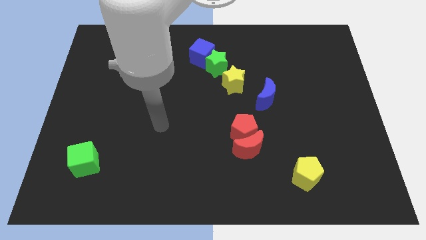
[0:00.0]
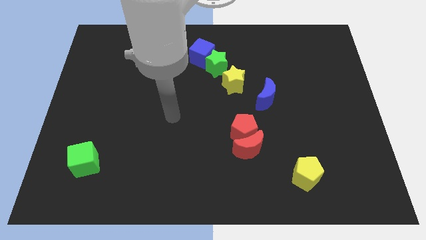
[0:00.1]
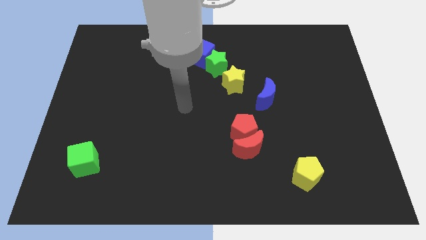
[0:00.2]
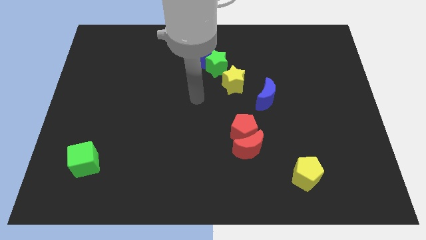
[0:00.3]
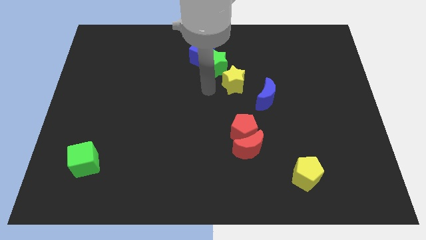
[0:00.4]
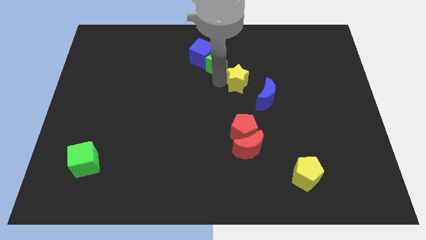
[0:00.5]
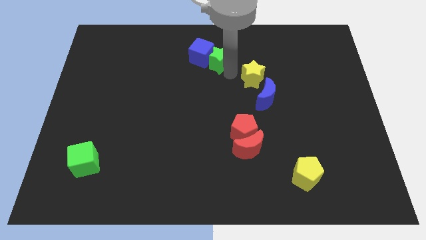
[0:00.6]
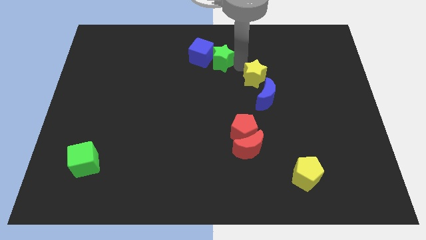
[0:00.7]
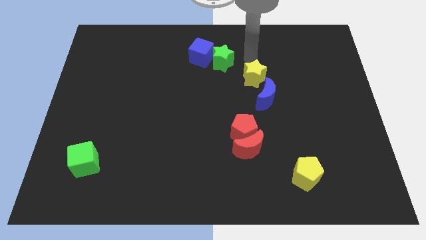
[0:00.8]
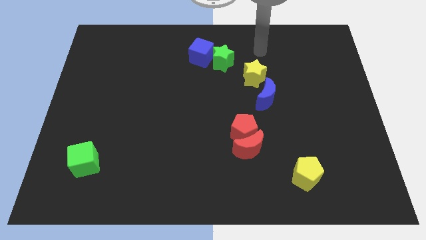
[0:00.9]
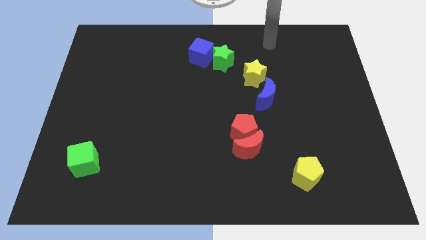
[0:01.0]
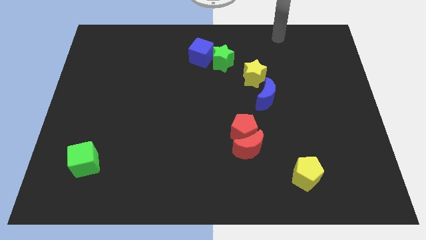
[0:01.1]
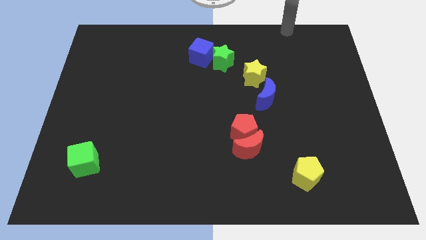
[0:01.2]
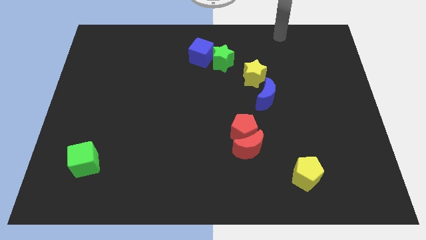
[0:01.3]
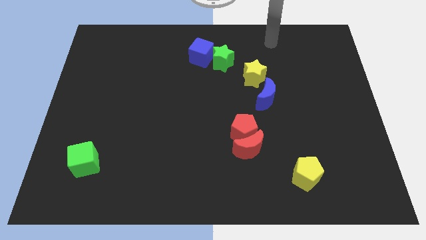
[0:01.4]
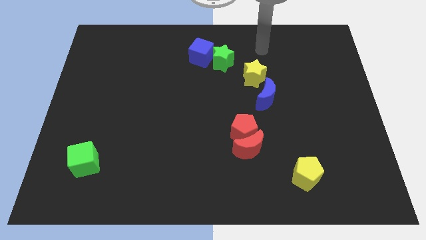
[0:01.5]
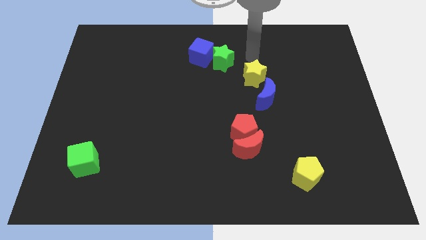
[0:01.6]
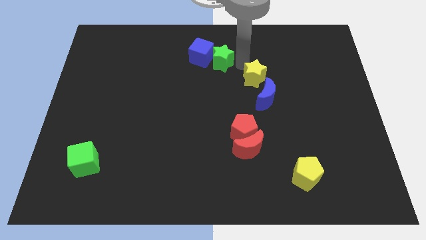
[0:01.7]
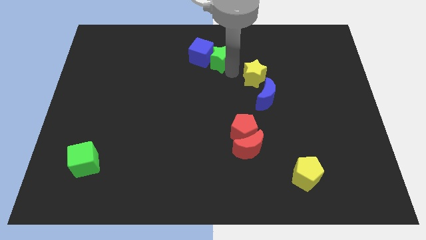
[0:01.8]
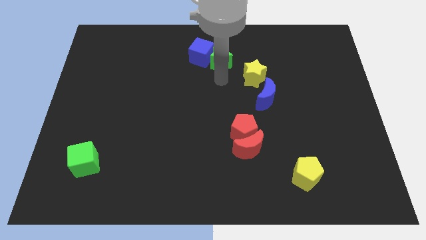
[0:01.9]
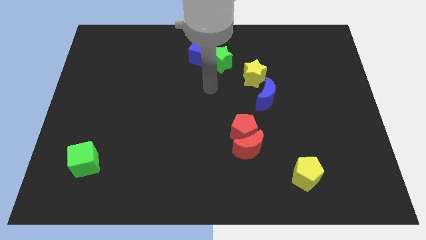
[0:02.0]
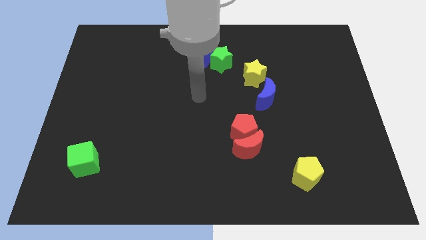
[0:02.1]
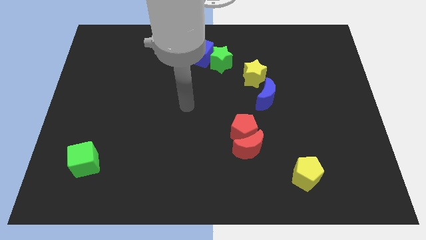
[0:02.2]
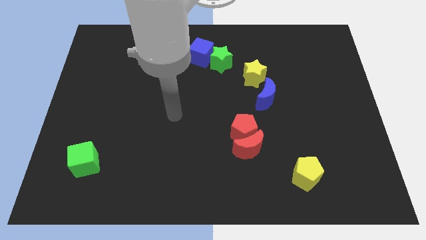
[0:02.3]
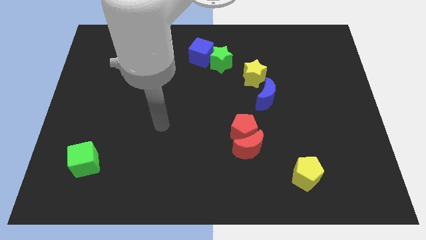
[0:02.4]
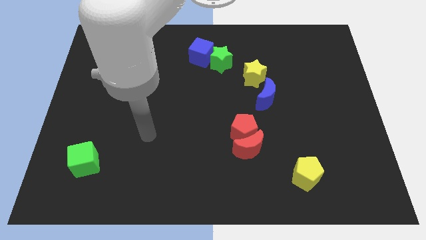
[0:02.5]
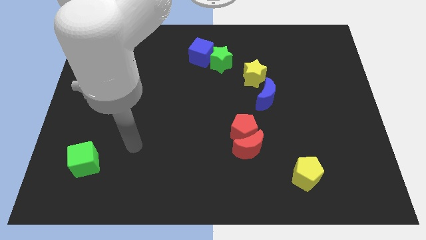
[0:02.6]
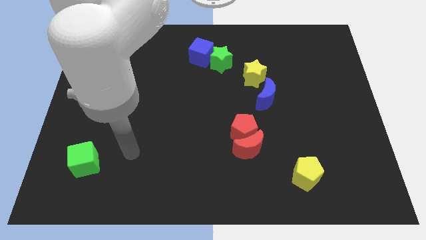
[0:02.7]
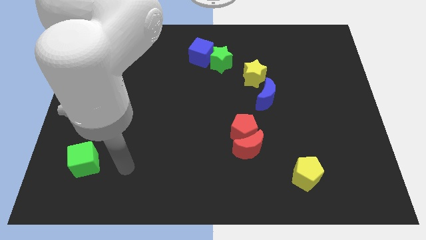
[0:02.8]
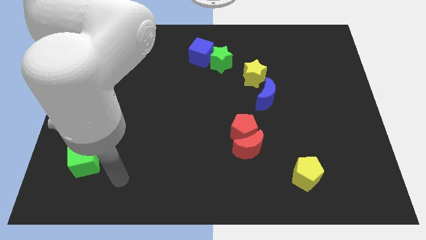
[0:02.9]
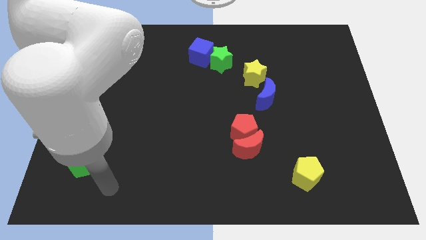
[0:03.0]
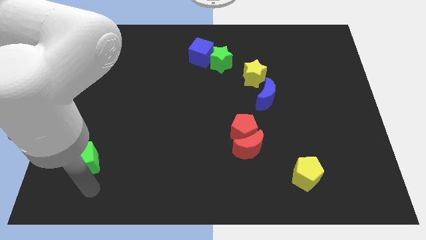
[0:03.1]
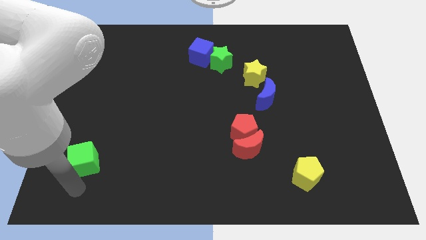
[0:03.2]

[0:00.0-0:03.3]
move your arm vertically at the bottom of the green cube

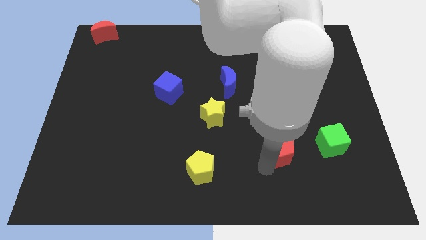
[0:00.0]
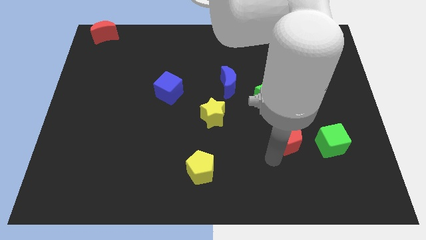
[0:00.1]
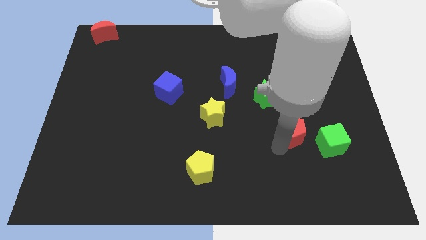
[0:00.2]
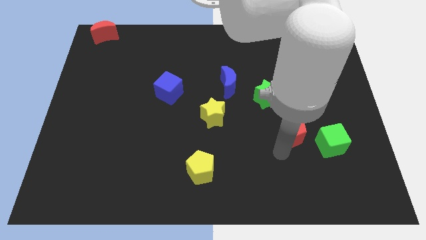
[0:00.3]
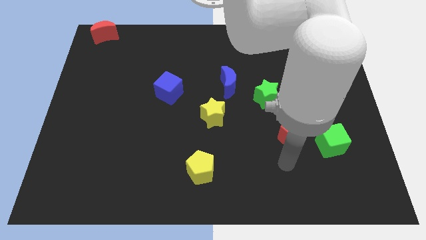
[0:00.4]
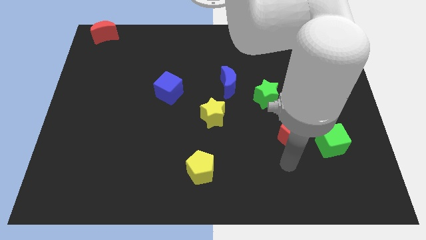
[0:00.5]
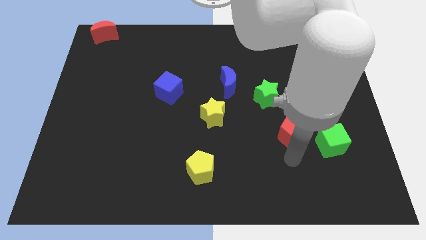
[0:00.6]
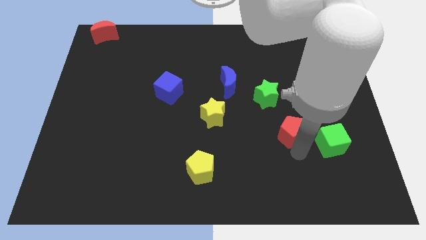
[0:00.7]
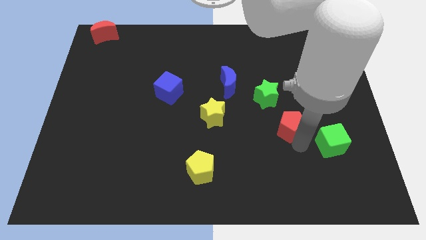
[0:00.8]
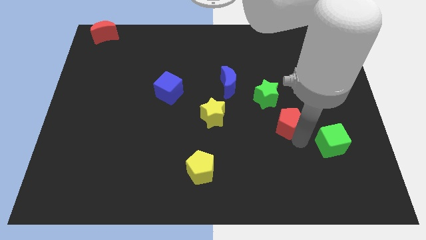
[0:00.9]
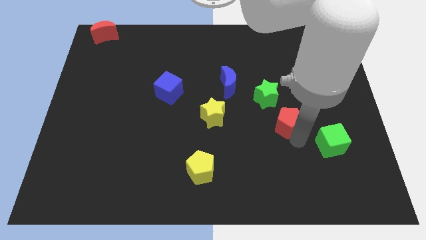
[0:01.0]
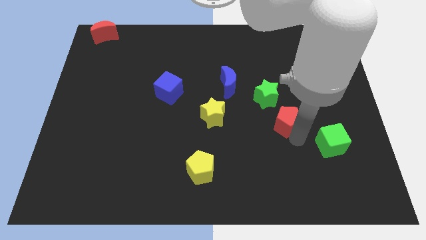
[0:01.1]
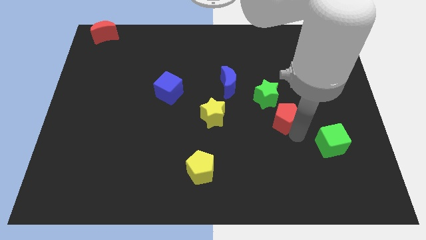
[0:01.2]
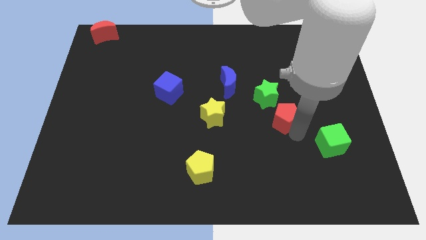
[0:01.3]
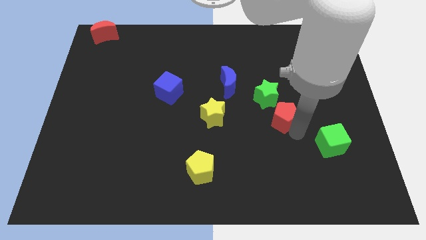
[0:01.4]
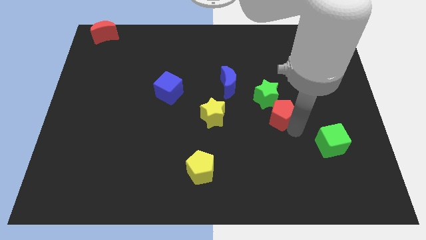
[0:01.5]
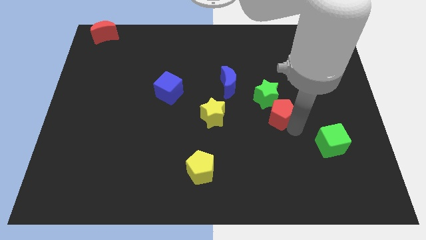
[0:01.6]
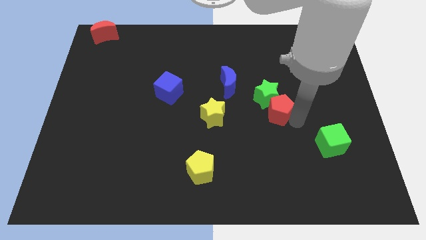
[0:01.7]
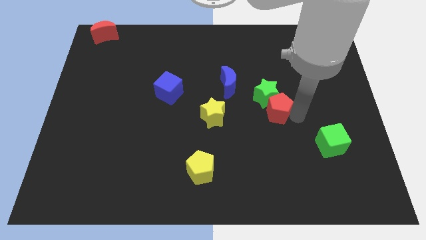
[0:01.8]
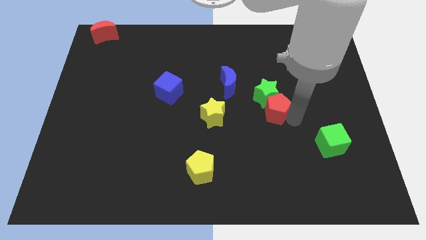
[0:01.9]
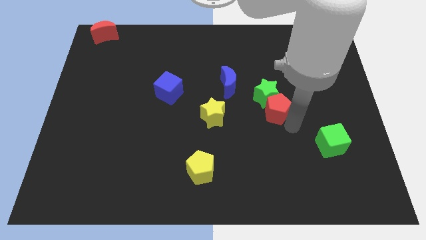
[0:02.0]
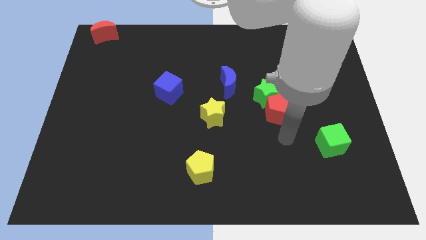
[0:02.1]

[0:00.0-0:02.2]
move the red pentagon into the green star

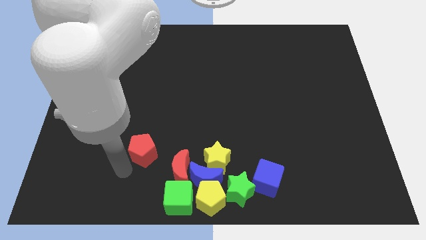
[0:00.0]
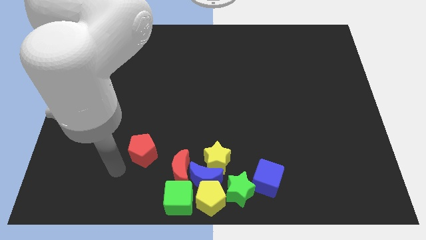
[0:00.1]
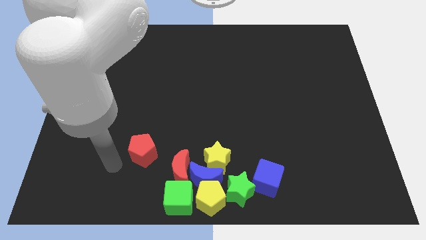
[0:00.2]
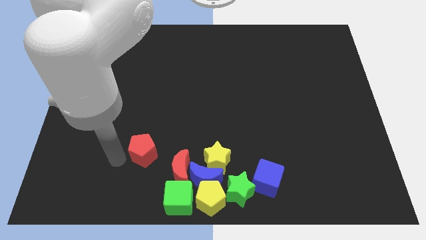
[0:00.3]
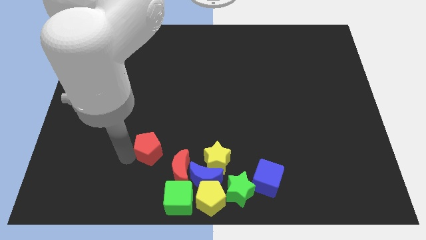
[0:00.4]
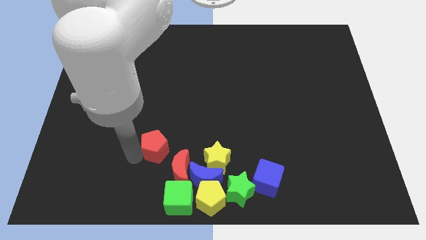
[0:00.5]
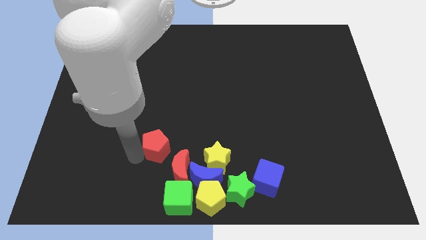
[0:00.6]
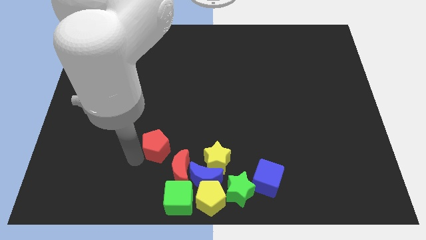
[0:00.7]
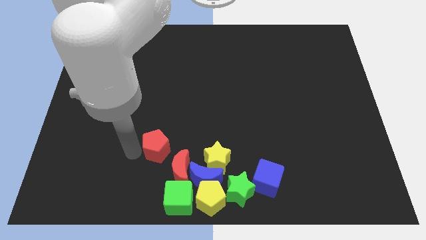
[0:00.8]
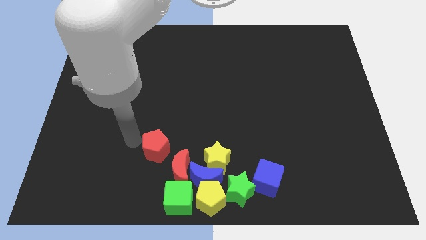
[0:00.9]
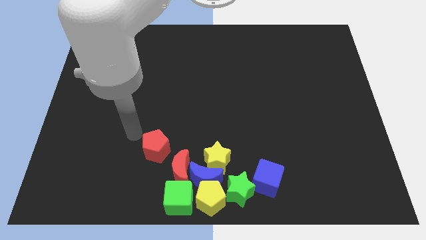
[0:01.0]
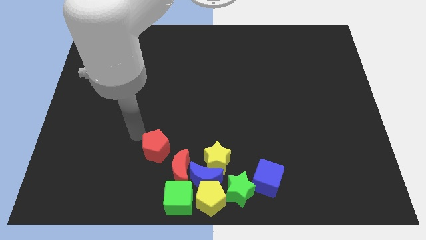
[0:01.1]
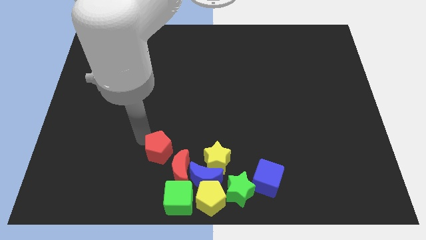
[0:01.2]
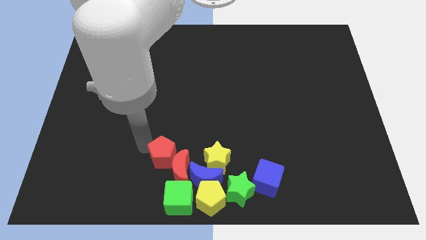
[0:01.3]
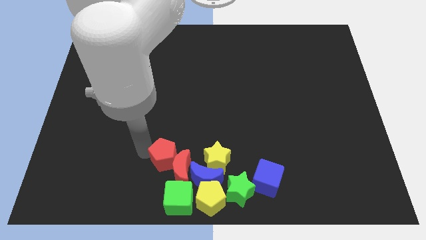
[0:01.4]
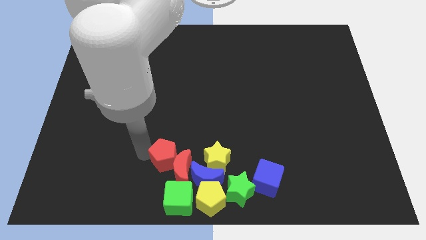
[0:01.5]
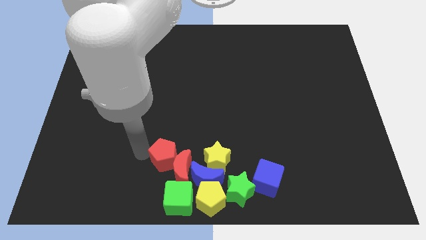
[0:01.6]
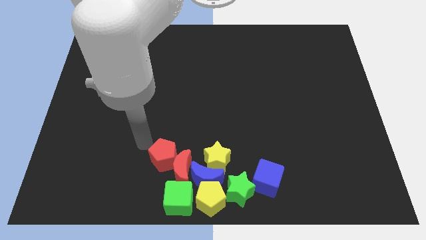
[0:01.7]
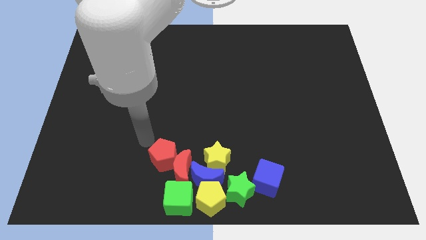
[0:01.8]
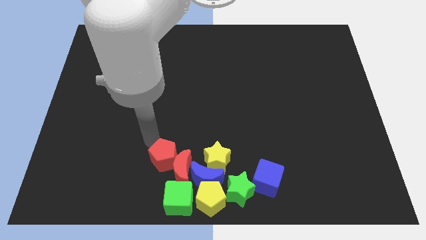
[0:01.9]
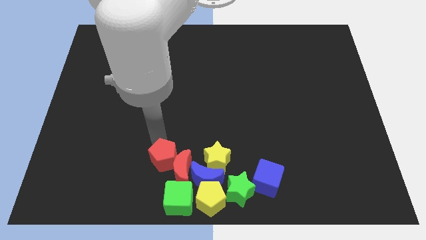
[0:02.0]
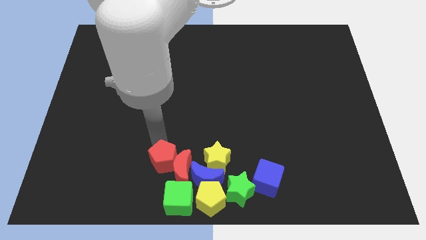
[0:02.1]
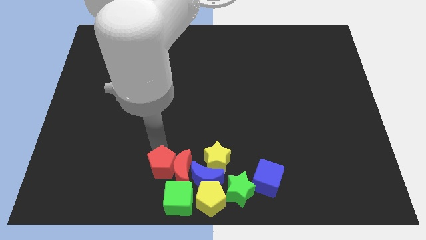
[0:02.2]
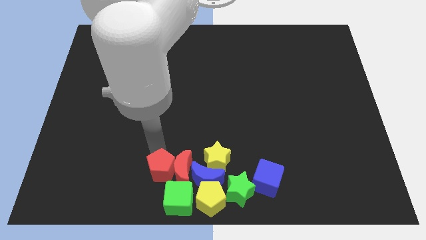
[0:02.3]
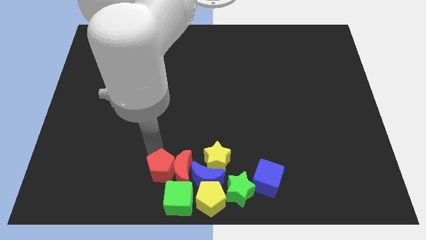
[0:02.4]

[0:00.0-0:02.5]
place red pentagon near red crescent

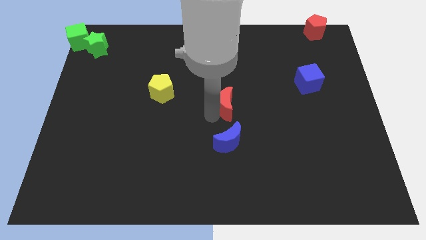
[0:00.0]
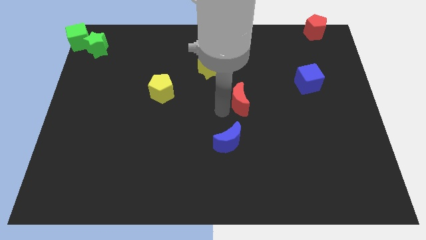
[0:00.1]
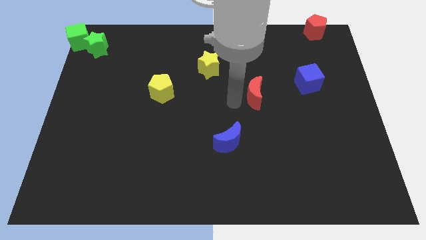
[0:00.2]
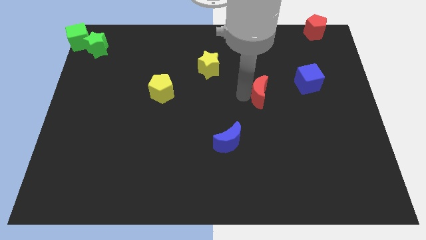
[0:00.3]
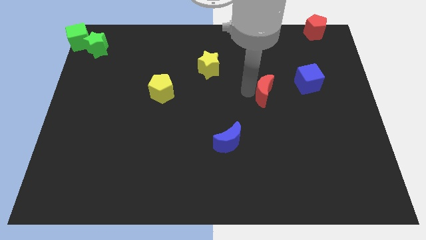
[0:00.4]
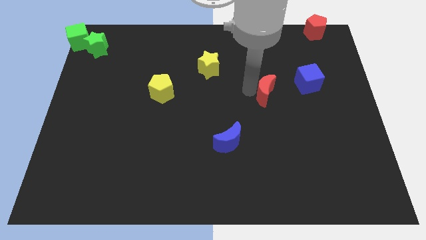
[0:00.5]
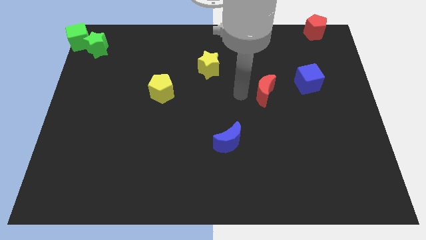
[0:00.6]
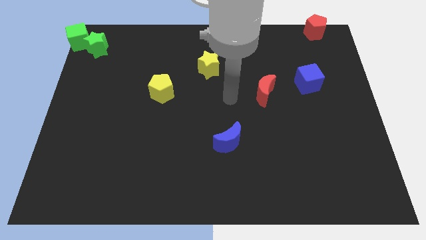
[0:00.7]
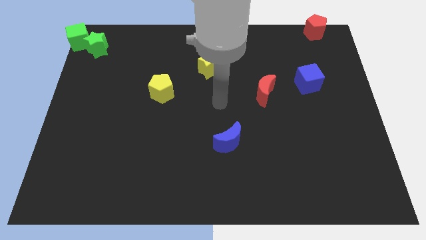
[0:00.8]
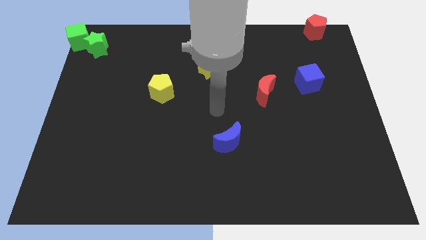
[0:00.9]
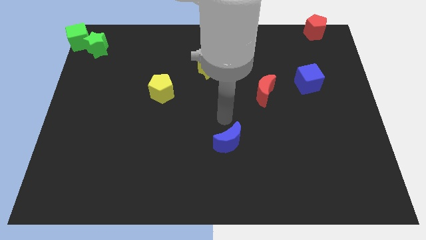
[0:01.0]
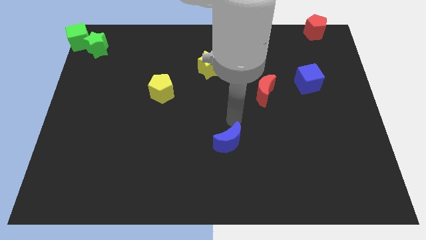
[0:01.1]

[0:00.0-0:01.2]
move the red crescent diagonal to the top right of the blue moon
